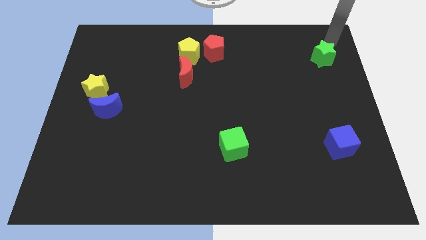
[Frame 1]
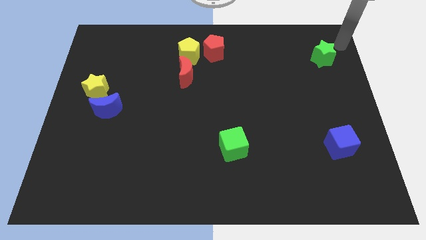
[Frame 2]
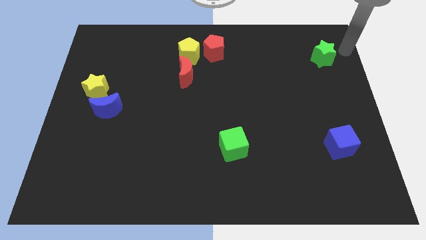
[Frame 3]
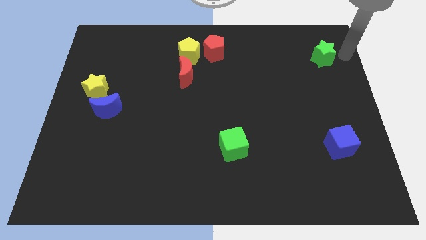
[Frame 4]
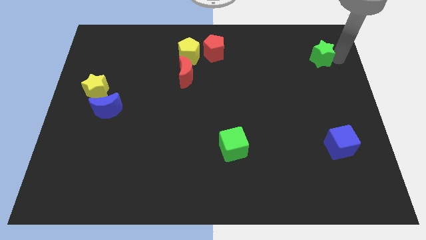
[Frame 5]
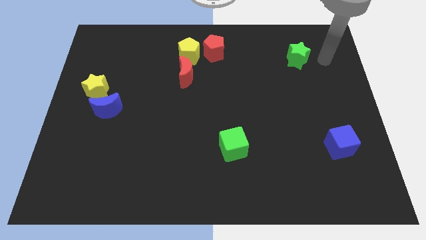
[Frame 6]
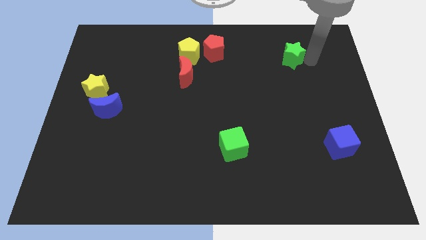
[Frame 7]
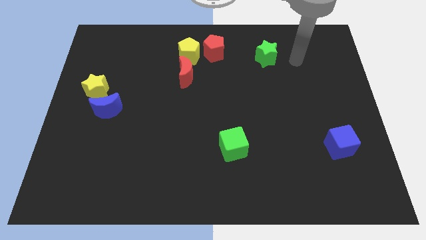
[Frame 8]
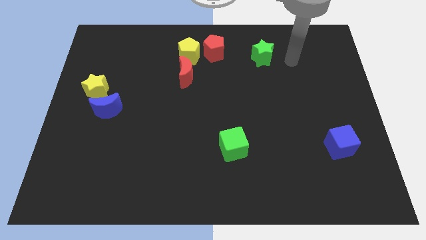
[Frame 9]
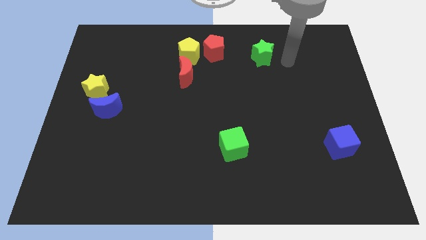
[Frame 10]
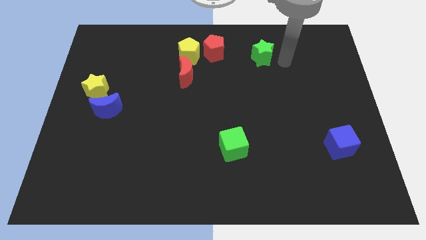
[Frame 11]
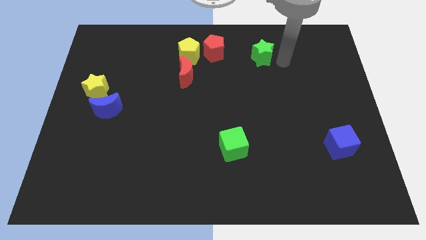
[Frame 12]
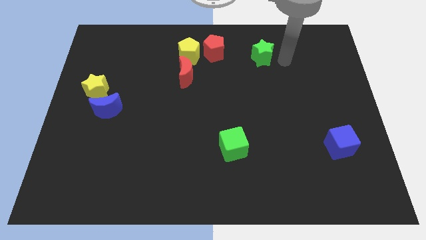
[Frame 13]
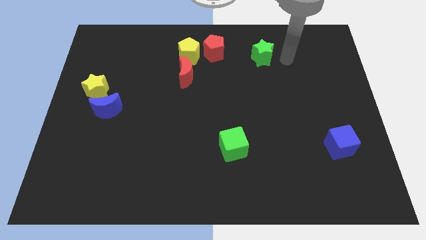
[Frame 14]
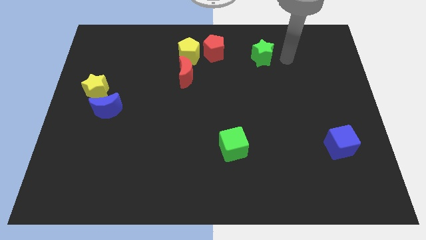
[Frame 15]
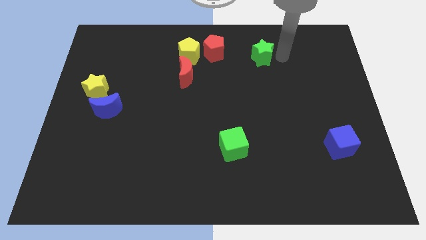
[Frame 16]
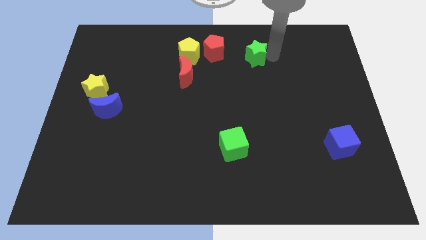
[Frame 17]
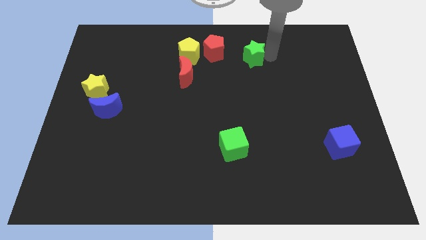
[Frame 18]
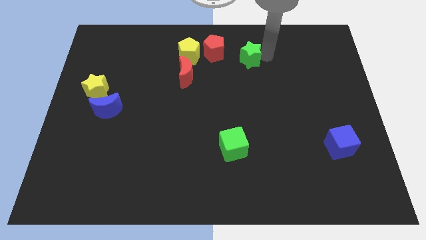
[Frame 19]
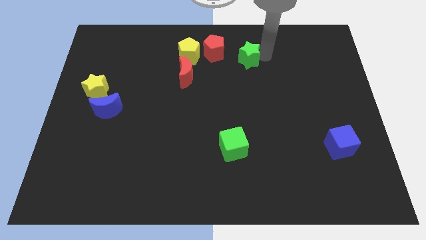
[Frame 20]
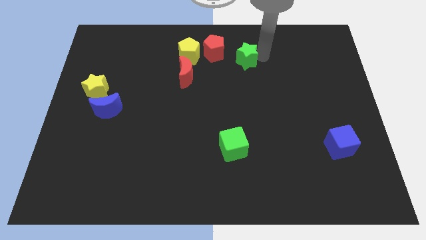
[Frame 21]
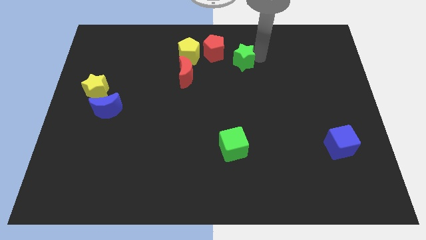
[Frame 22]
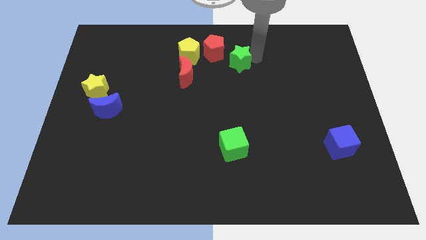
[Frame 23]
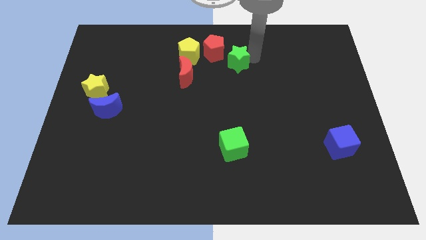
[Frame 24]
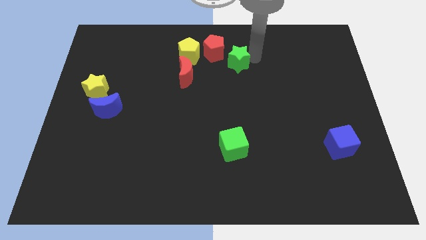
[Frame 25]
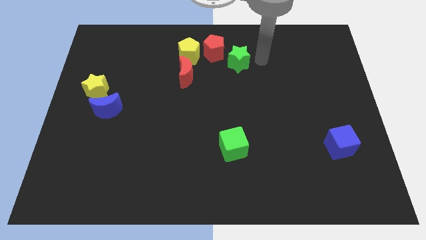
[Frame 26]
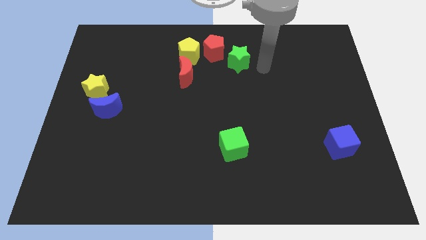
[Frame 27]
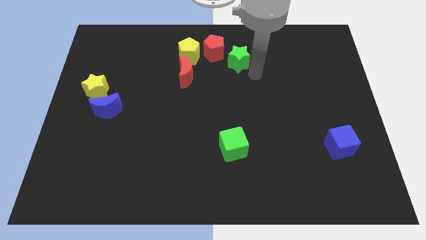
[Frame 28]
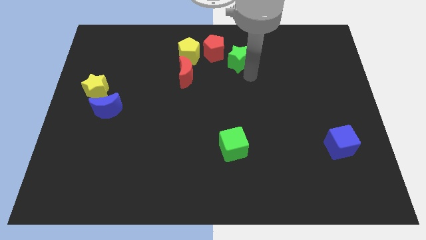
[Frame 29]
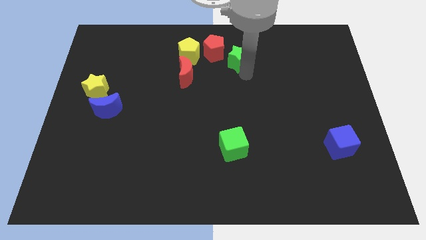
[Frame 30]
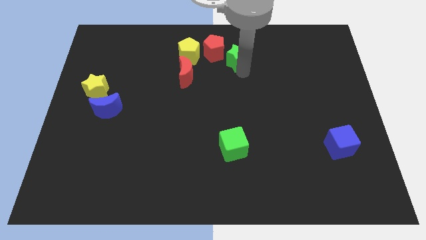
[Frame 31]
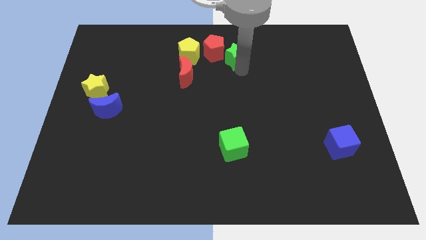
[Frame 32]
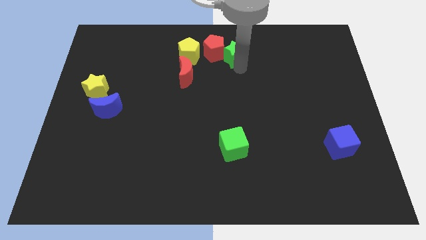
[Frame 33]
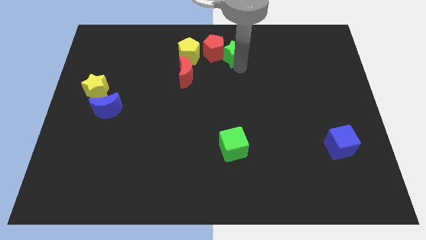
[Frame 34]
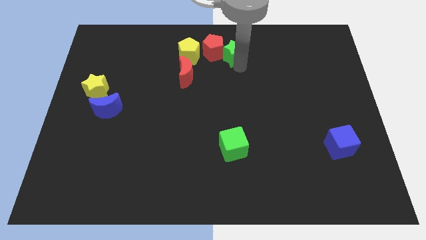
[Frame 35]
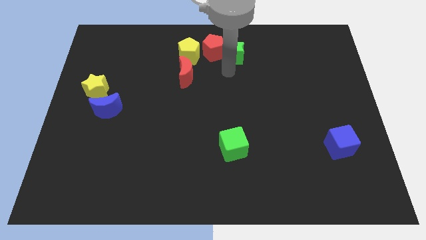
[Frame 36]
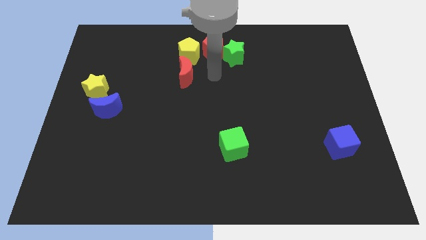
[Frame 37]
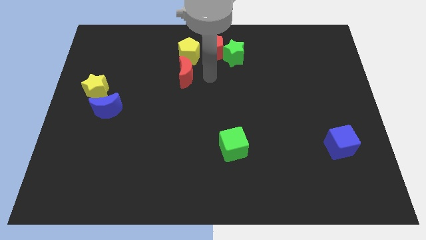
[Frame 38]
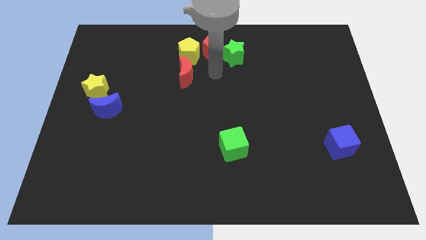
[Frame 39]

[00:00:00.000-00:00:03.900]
push the green star towards the red pentagon

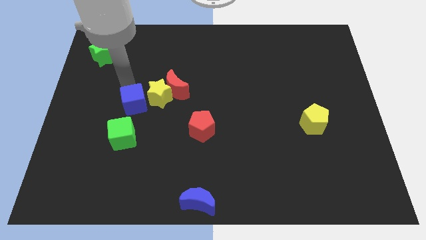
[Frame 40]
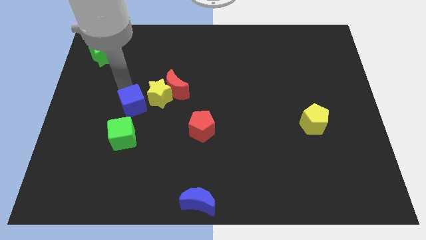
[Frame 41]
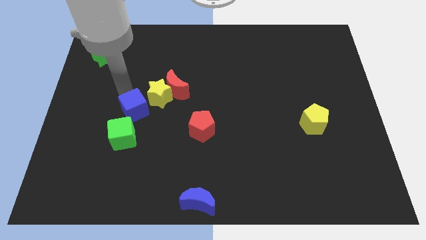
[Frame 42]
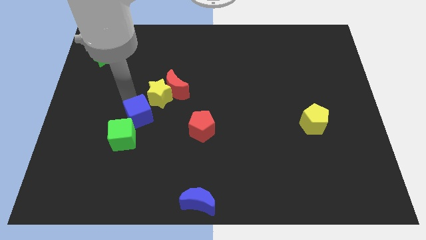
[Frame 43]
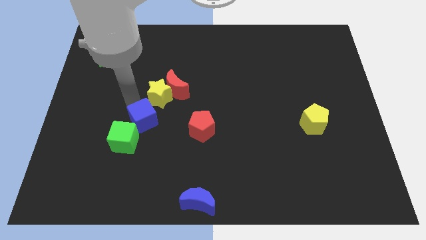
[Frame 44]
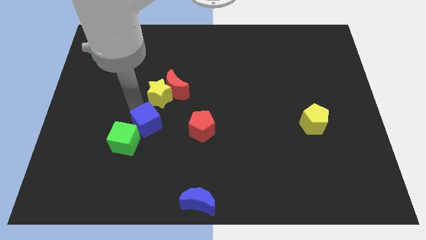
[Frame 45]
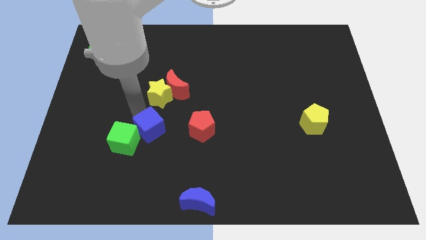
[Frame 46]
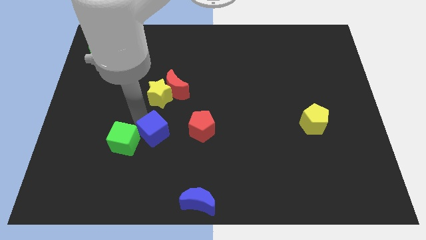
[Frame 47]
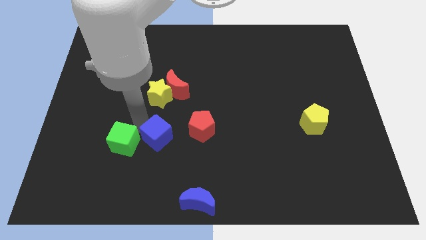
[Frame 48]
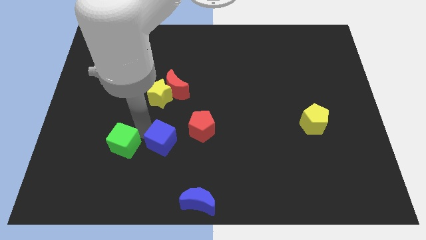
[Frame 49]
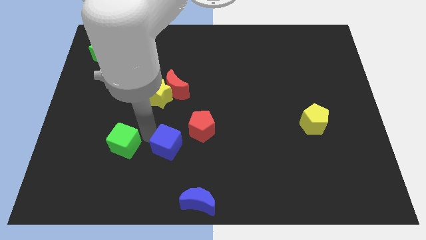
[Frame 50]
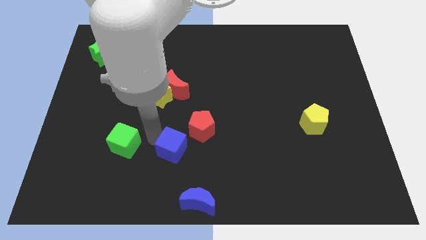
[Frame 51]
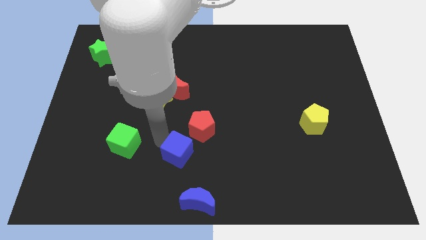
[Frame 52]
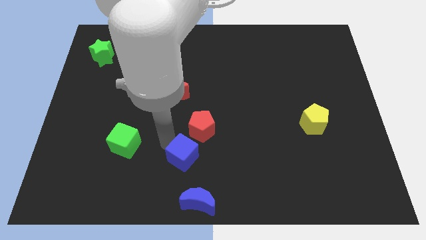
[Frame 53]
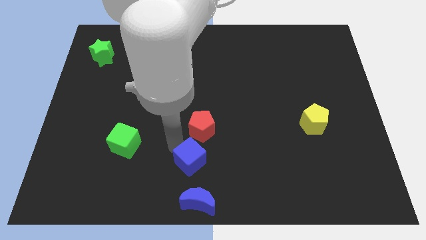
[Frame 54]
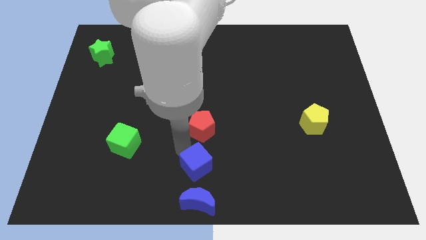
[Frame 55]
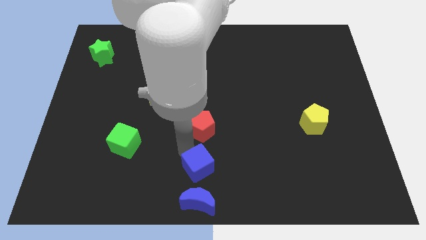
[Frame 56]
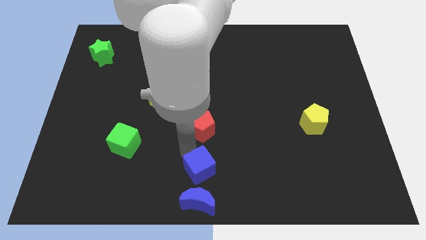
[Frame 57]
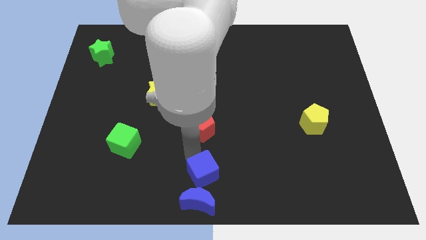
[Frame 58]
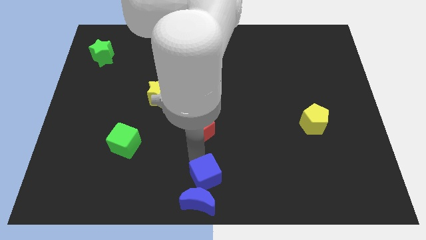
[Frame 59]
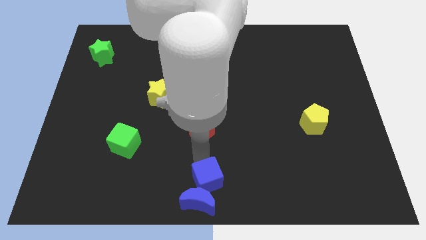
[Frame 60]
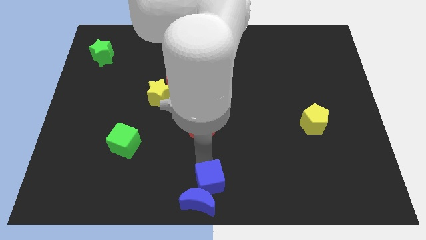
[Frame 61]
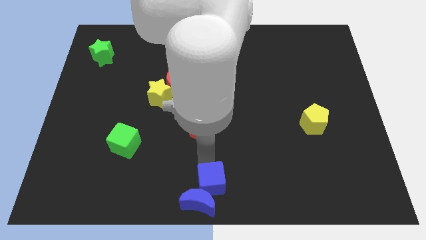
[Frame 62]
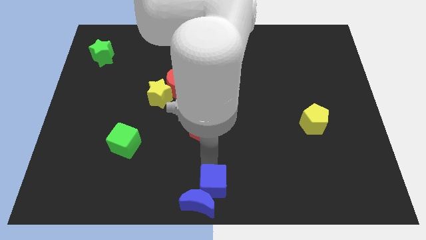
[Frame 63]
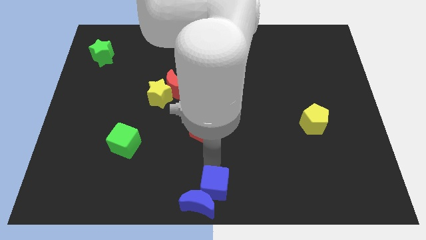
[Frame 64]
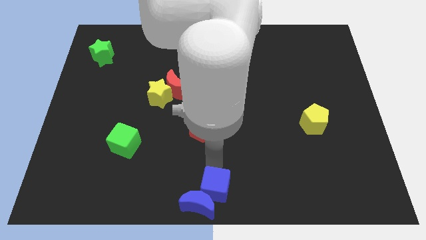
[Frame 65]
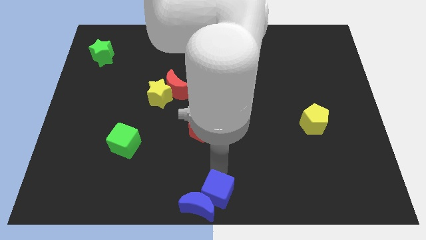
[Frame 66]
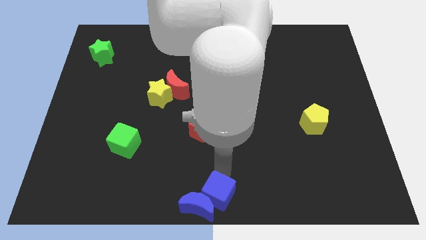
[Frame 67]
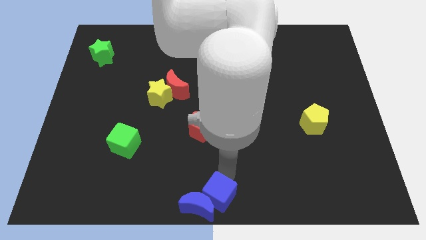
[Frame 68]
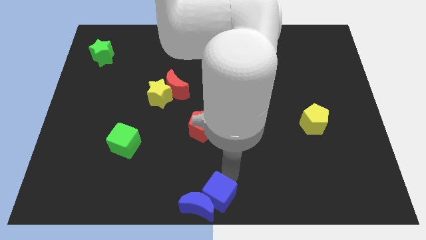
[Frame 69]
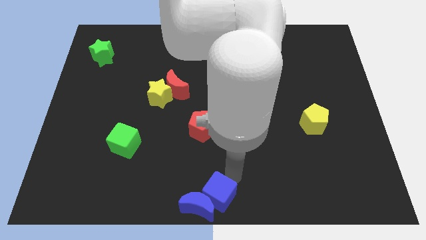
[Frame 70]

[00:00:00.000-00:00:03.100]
put the blue cube at the bottom center of the board

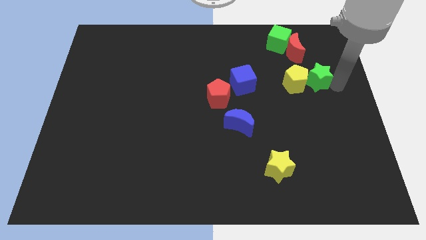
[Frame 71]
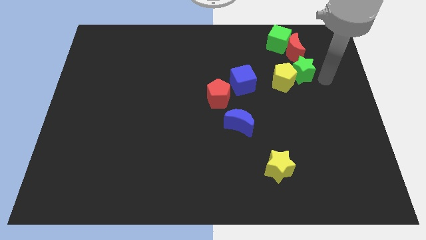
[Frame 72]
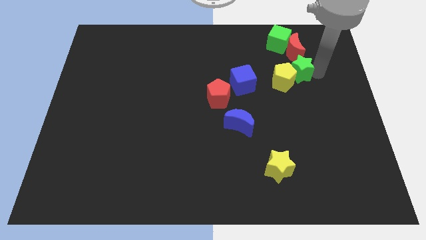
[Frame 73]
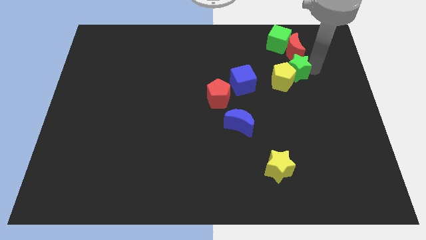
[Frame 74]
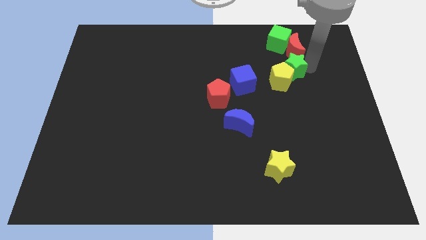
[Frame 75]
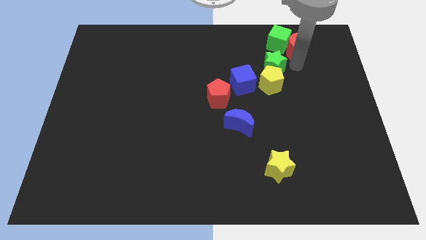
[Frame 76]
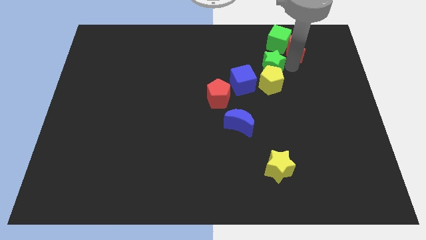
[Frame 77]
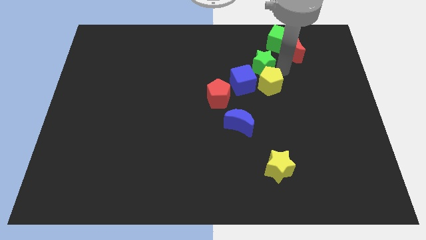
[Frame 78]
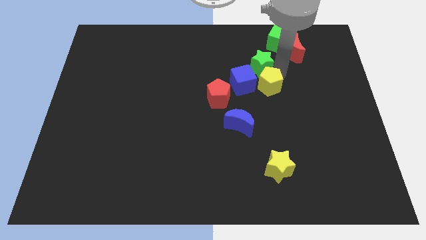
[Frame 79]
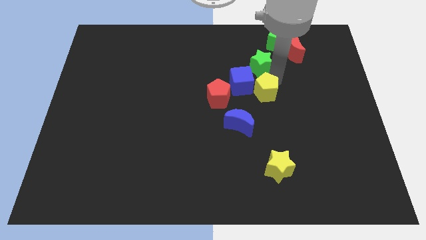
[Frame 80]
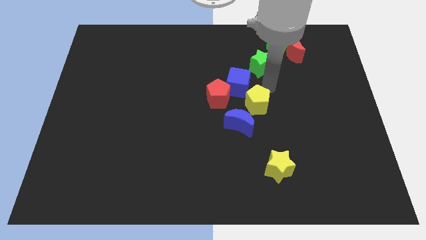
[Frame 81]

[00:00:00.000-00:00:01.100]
slide yellow pentagon and green star into blue cube

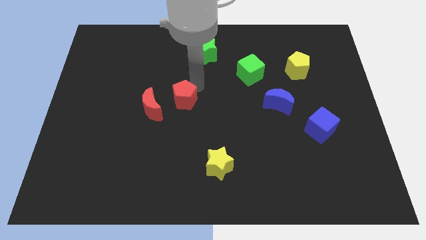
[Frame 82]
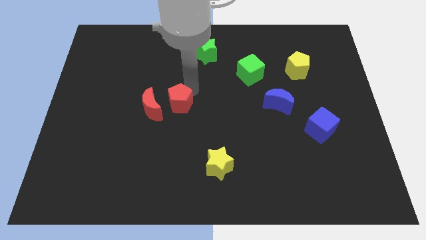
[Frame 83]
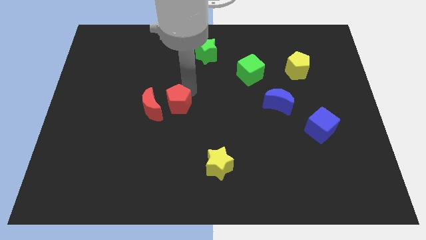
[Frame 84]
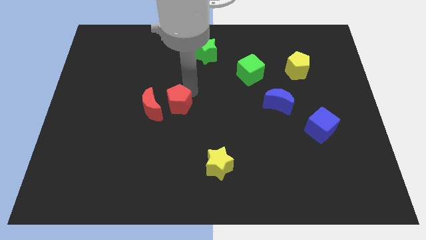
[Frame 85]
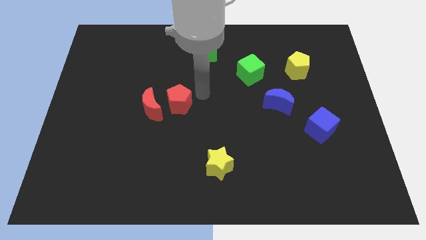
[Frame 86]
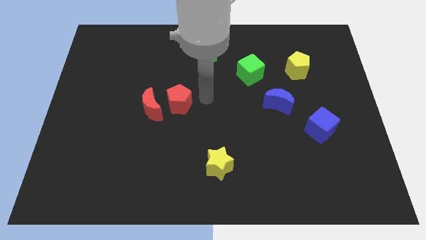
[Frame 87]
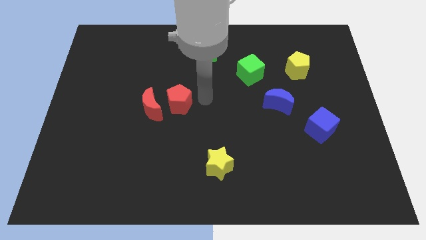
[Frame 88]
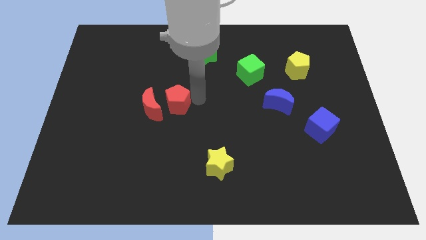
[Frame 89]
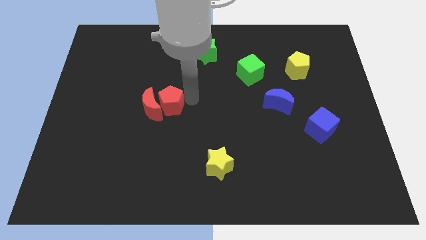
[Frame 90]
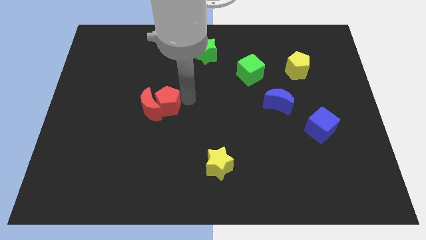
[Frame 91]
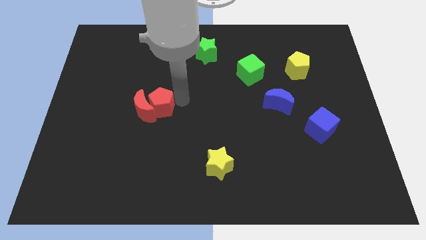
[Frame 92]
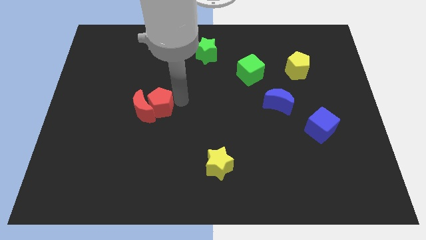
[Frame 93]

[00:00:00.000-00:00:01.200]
place red pentagon to the right side of the red moon
